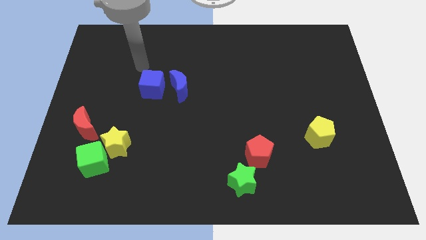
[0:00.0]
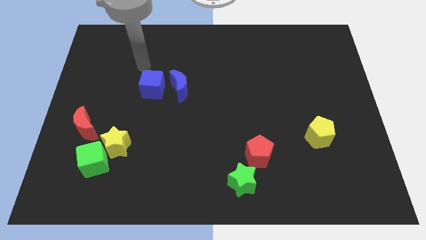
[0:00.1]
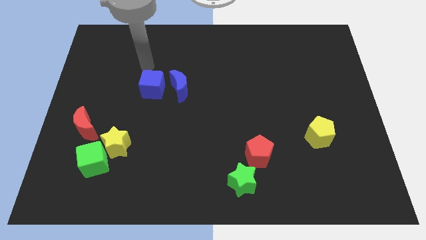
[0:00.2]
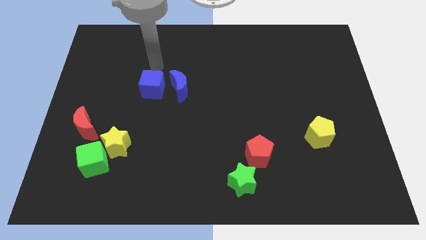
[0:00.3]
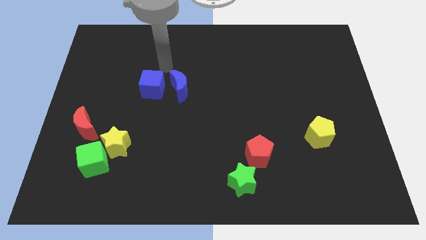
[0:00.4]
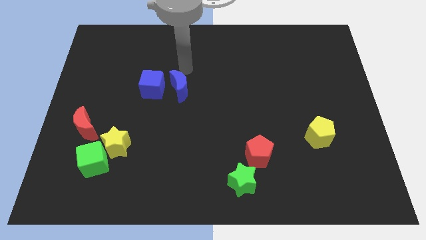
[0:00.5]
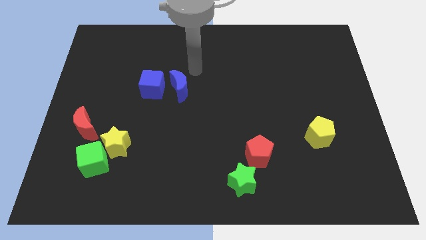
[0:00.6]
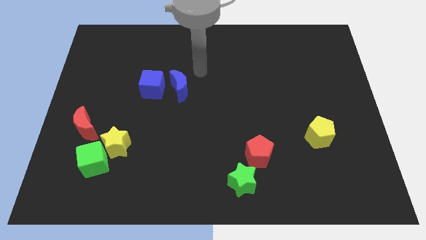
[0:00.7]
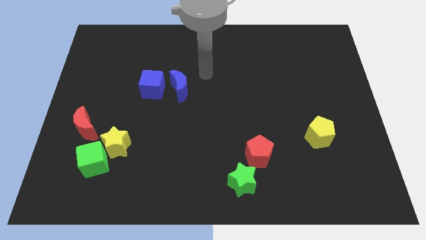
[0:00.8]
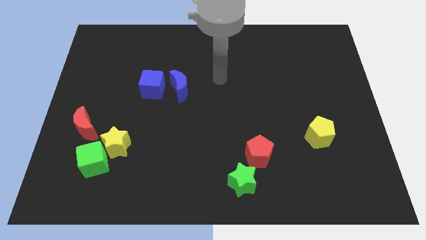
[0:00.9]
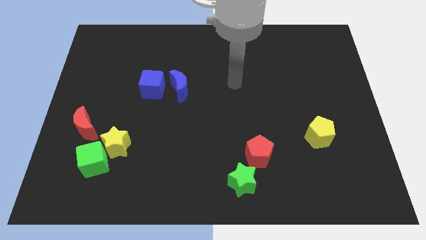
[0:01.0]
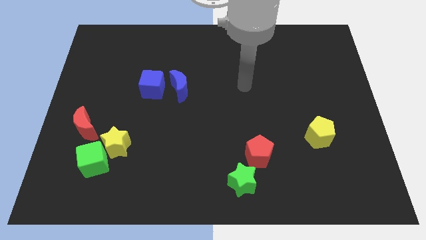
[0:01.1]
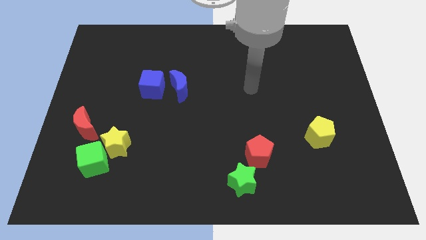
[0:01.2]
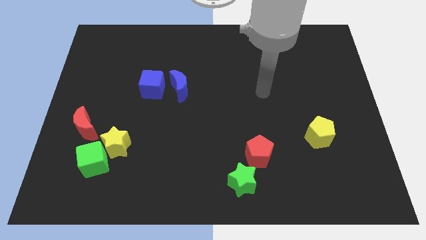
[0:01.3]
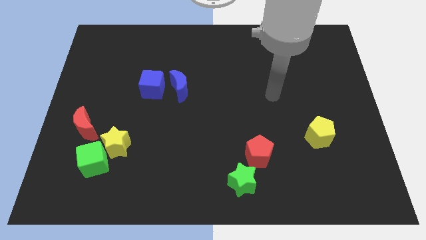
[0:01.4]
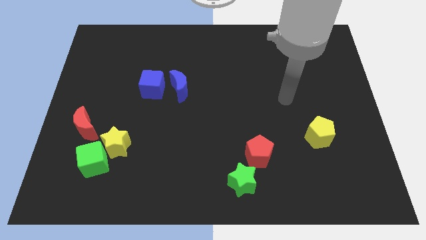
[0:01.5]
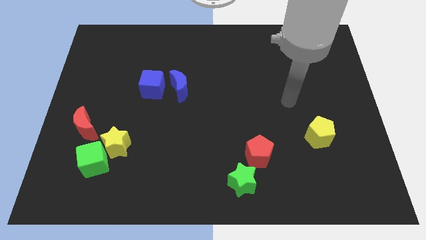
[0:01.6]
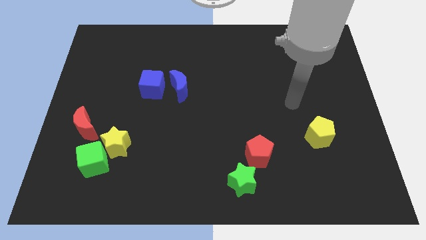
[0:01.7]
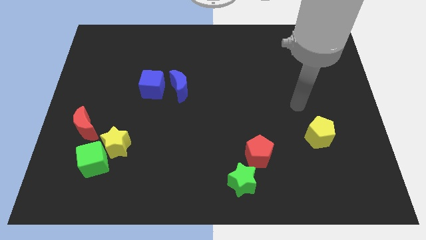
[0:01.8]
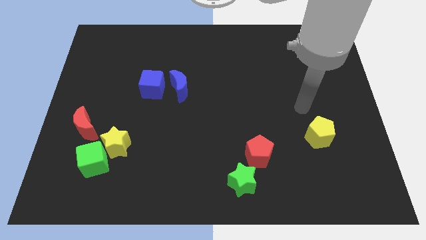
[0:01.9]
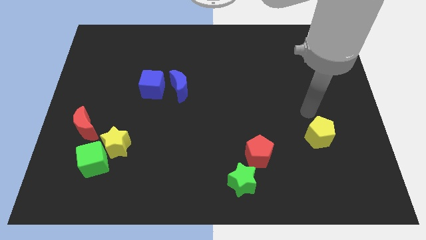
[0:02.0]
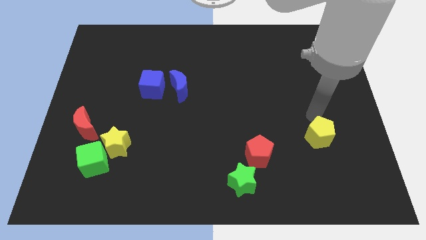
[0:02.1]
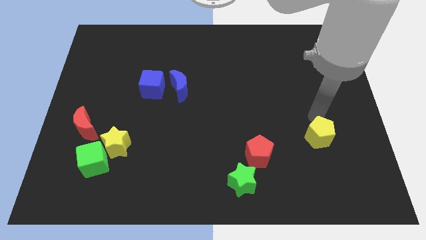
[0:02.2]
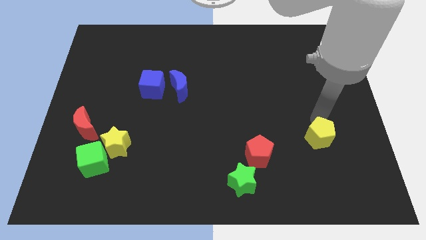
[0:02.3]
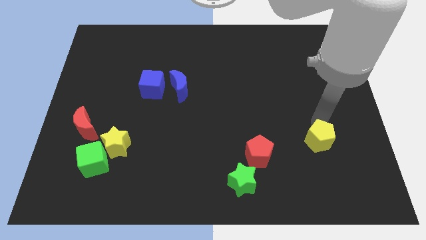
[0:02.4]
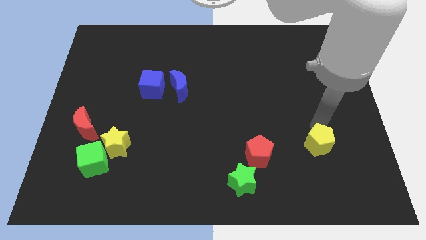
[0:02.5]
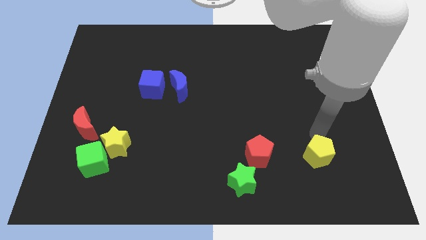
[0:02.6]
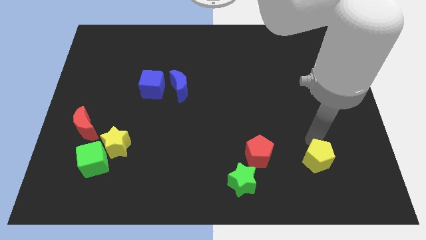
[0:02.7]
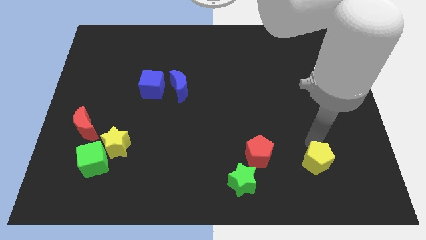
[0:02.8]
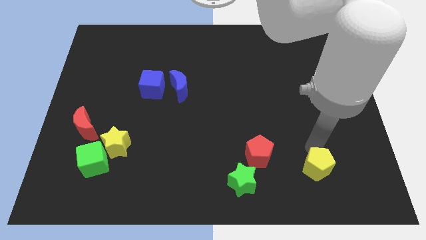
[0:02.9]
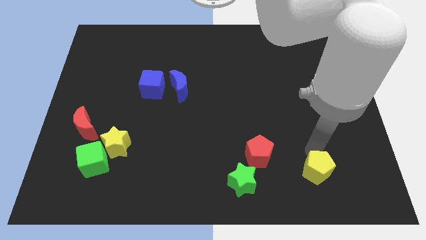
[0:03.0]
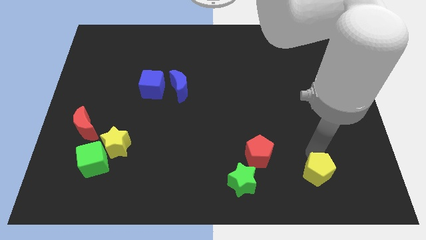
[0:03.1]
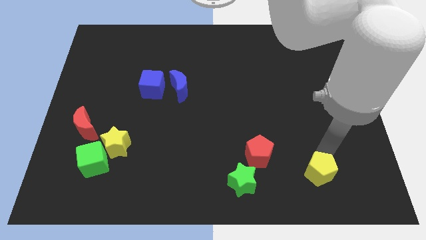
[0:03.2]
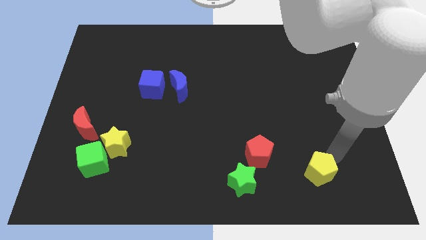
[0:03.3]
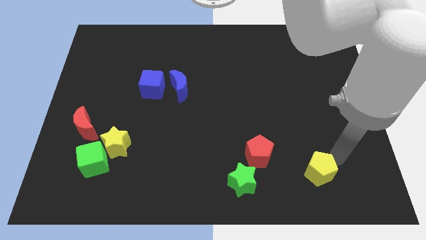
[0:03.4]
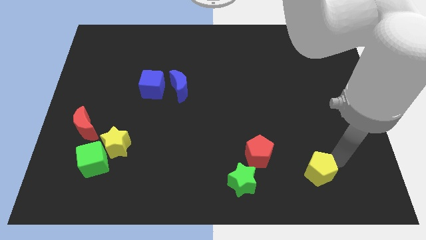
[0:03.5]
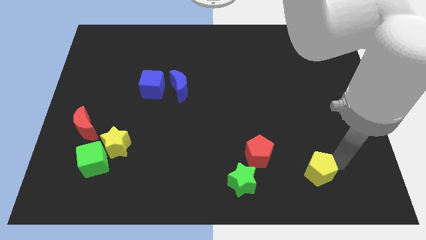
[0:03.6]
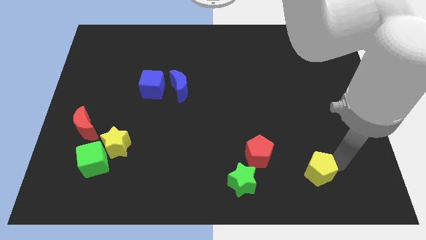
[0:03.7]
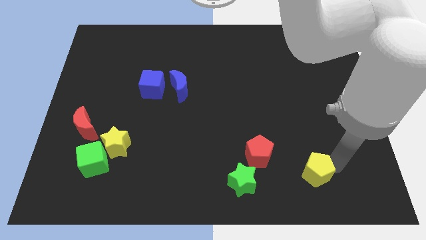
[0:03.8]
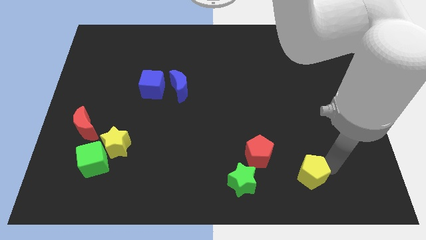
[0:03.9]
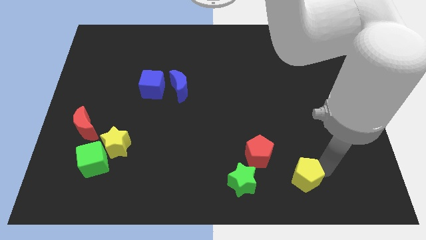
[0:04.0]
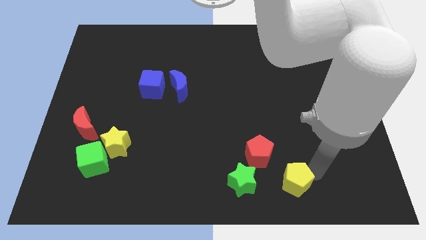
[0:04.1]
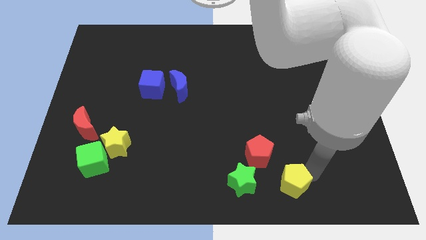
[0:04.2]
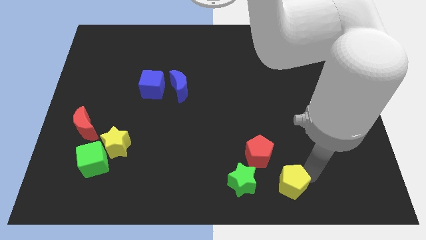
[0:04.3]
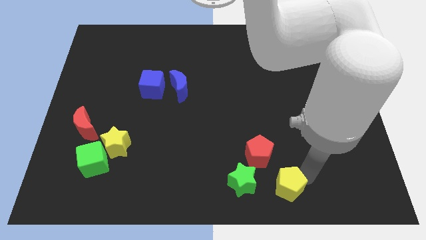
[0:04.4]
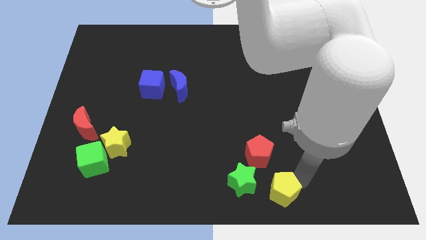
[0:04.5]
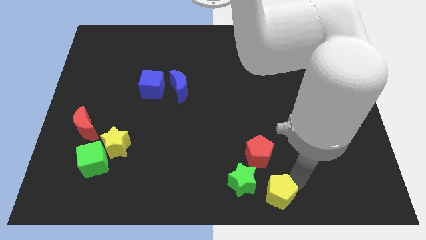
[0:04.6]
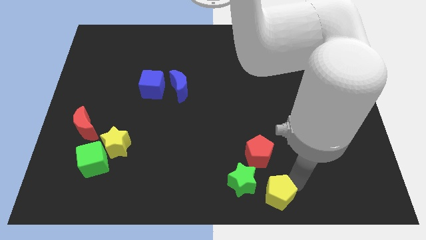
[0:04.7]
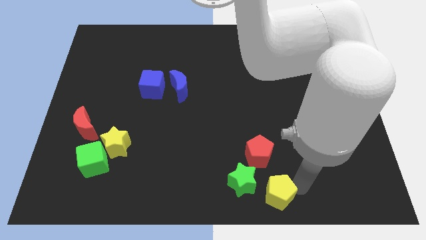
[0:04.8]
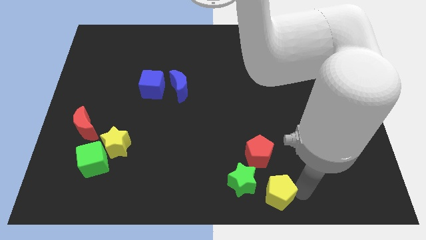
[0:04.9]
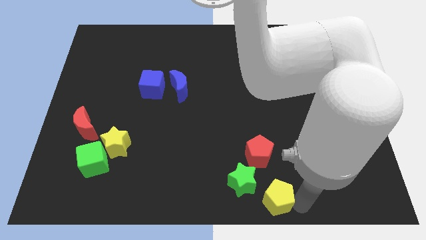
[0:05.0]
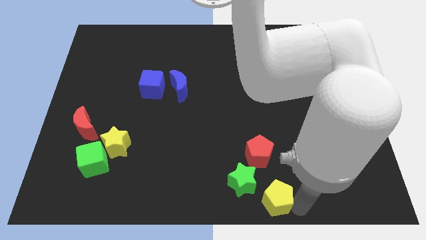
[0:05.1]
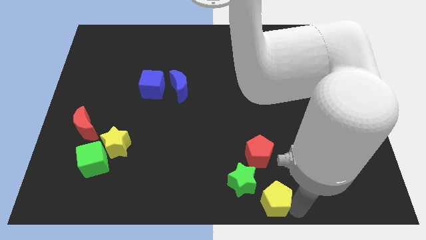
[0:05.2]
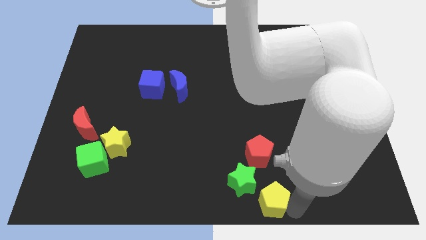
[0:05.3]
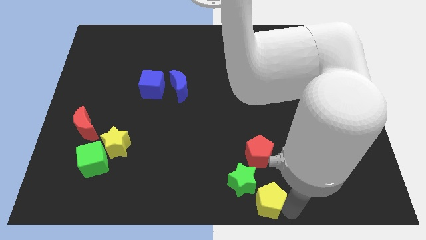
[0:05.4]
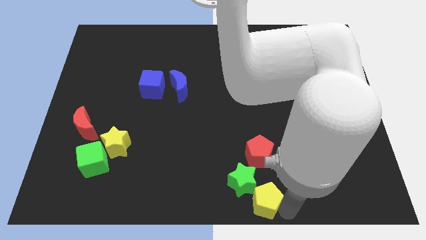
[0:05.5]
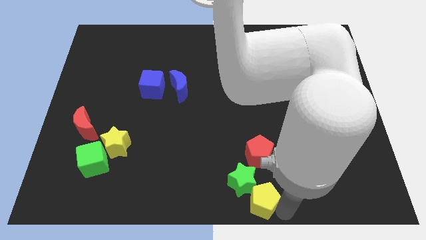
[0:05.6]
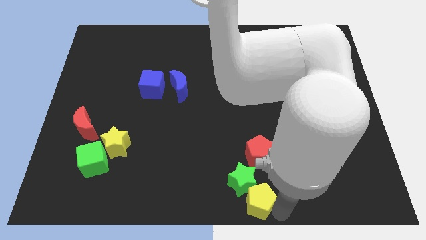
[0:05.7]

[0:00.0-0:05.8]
put the yellow pentagon towards the green star

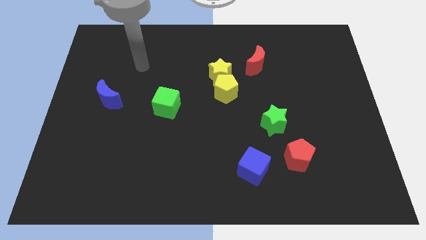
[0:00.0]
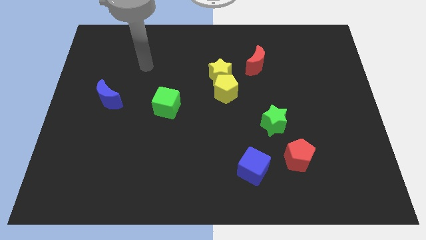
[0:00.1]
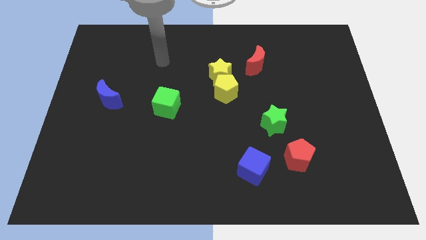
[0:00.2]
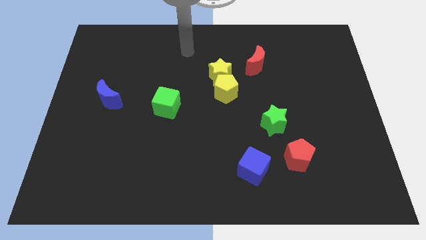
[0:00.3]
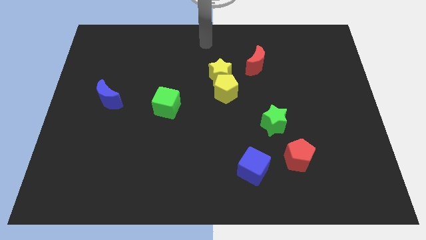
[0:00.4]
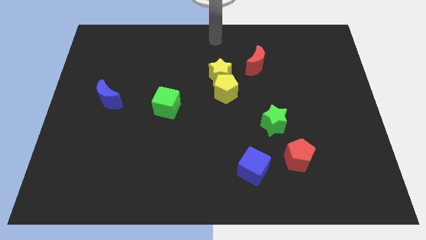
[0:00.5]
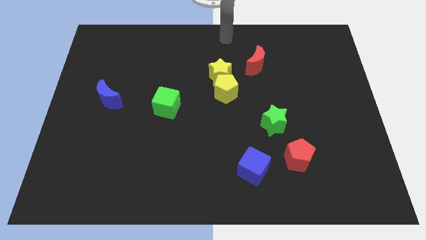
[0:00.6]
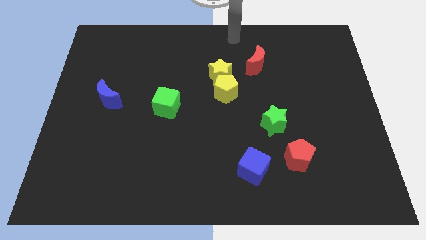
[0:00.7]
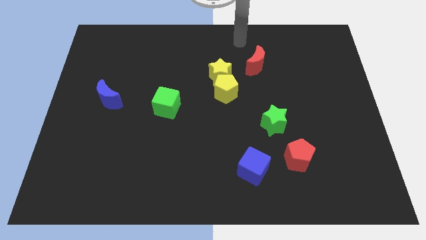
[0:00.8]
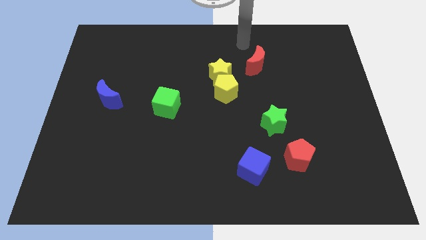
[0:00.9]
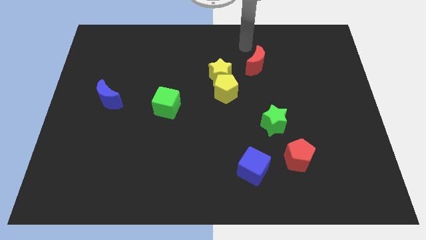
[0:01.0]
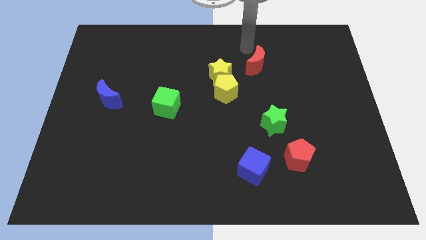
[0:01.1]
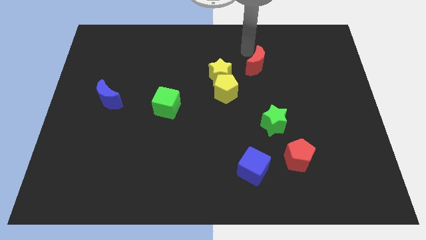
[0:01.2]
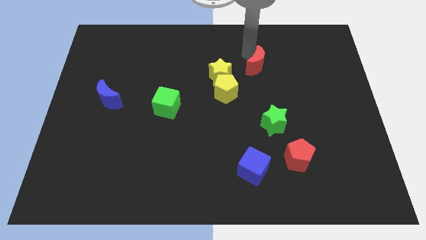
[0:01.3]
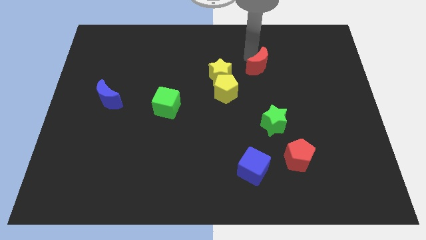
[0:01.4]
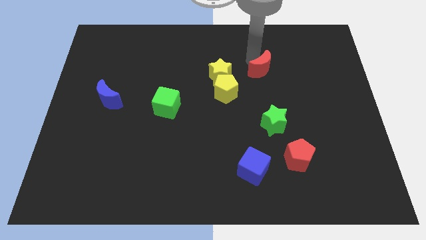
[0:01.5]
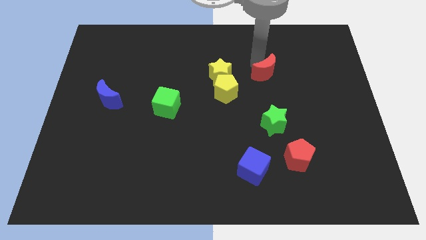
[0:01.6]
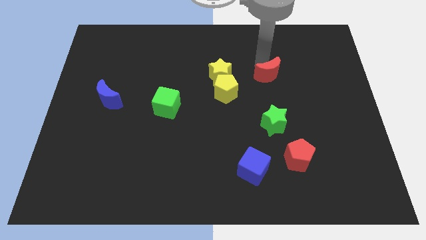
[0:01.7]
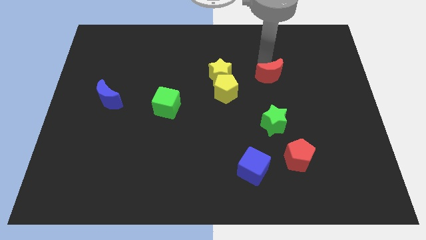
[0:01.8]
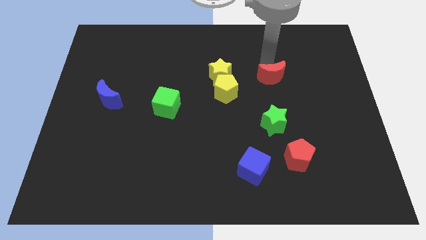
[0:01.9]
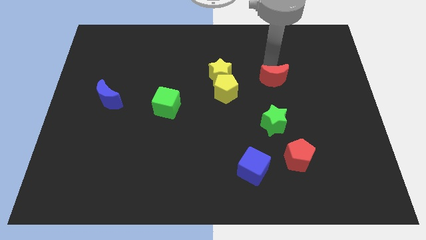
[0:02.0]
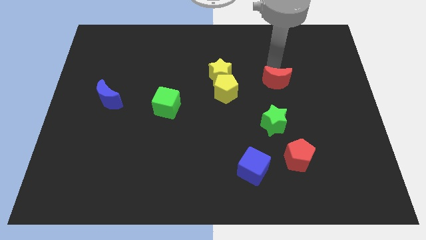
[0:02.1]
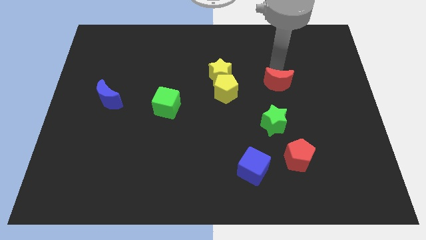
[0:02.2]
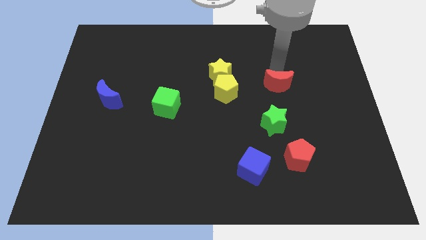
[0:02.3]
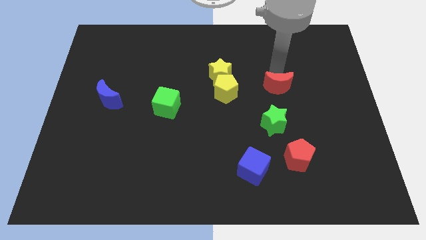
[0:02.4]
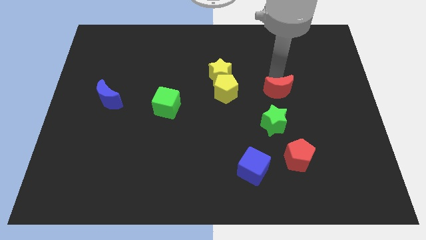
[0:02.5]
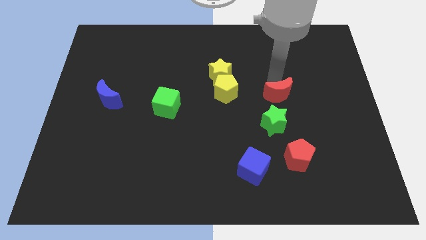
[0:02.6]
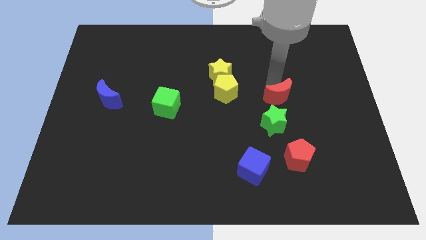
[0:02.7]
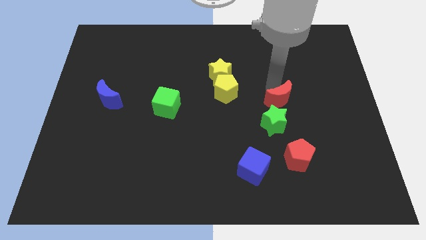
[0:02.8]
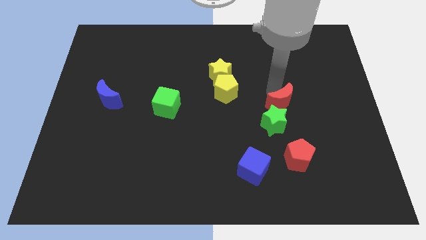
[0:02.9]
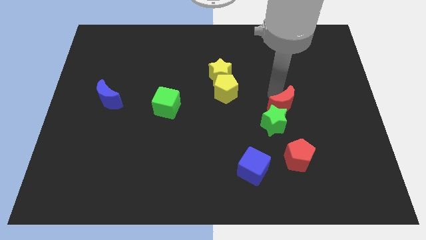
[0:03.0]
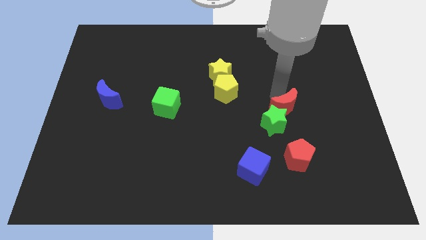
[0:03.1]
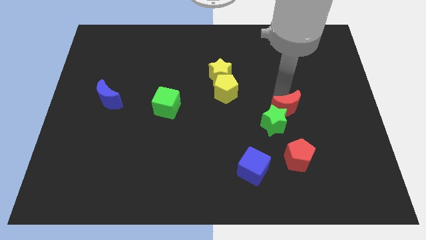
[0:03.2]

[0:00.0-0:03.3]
slide the red moon next to the green star
